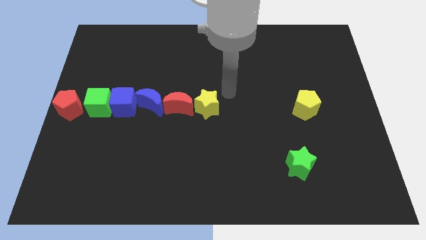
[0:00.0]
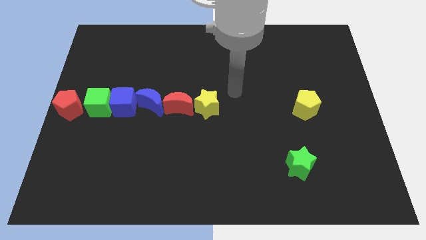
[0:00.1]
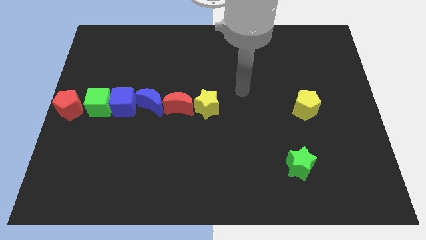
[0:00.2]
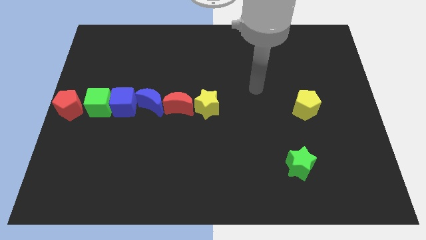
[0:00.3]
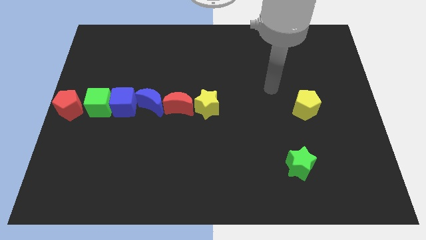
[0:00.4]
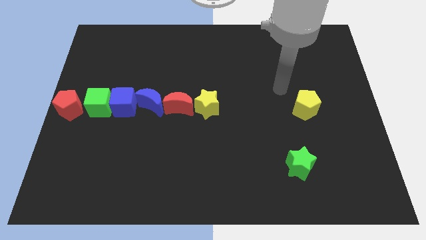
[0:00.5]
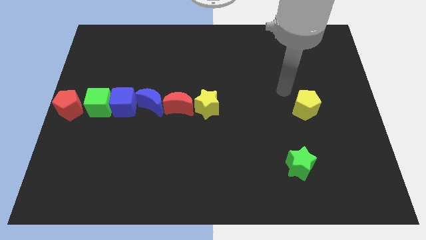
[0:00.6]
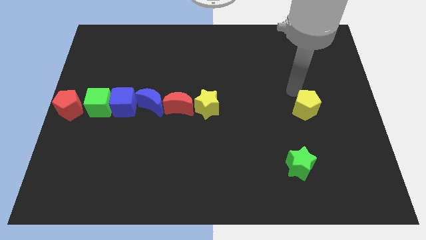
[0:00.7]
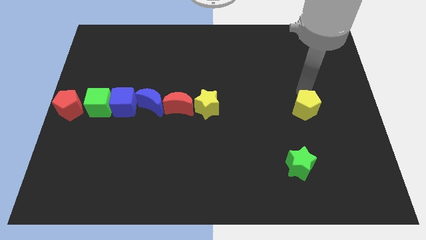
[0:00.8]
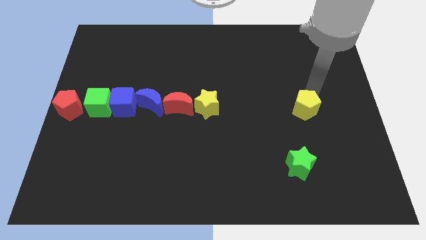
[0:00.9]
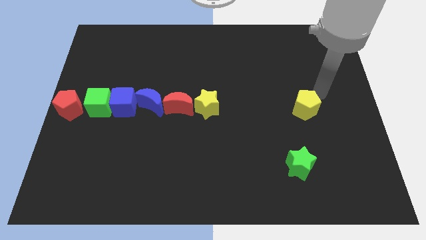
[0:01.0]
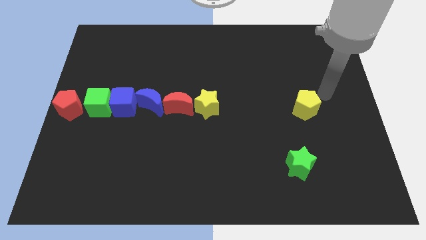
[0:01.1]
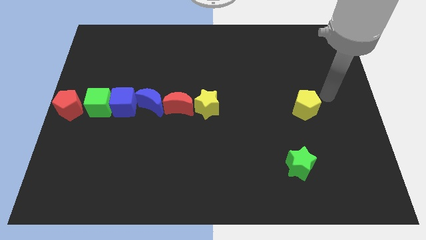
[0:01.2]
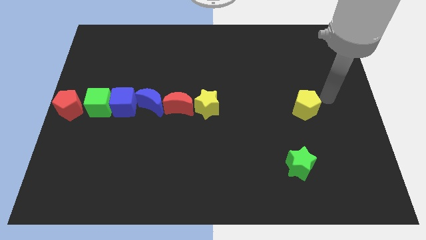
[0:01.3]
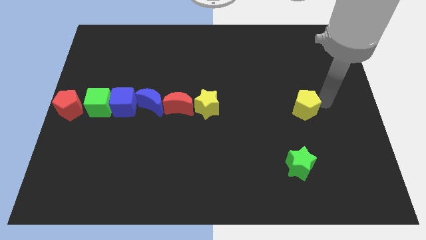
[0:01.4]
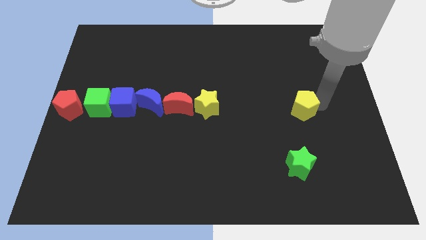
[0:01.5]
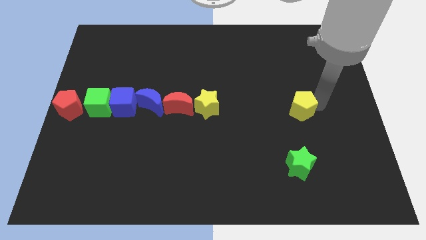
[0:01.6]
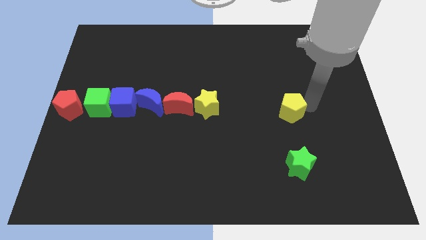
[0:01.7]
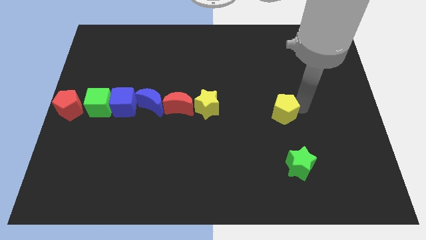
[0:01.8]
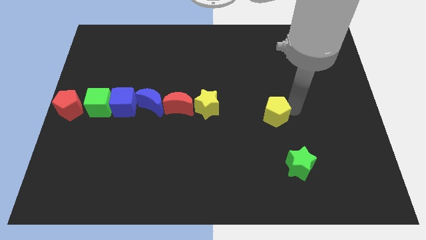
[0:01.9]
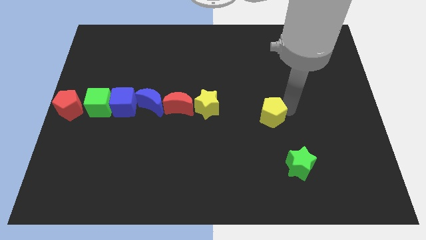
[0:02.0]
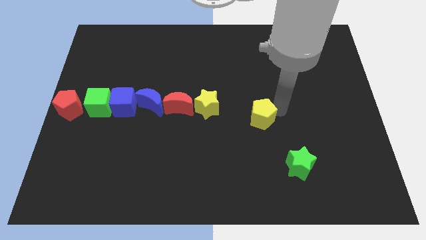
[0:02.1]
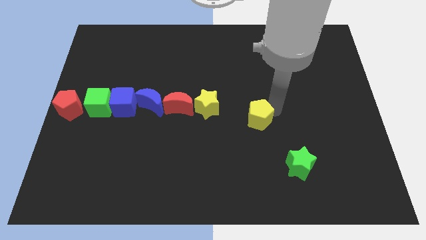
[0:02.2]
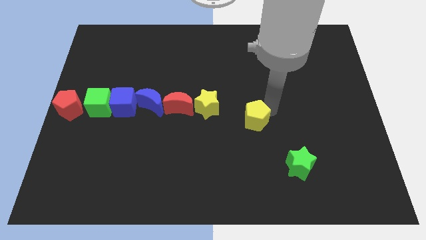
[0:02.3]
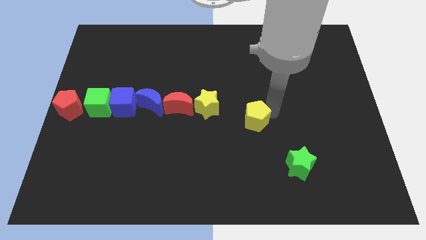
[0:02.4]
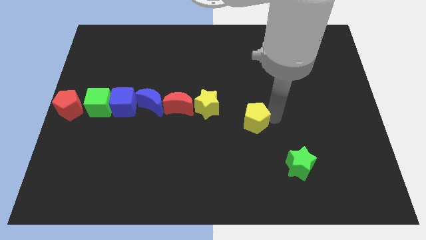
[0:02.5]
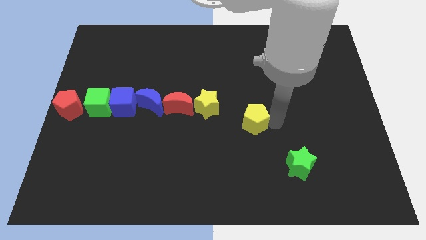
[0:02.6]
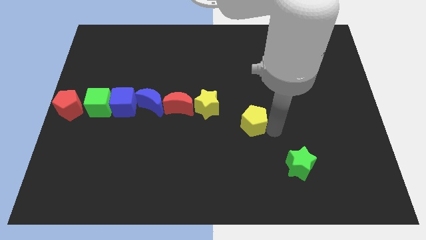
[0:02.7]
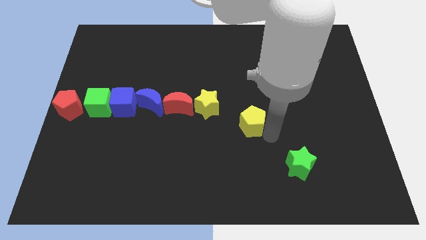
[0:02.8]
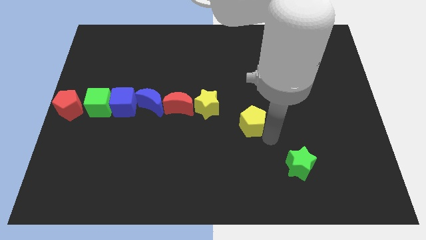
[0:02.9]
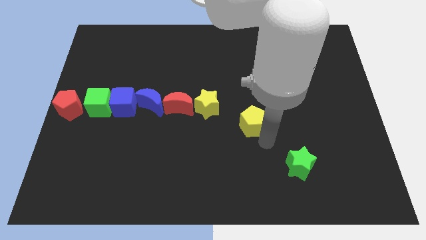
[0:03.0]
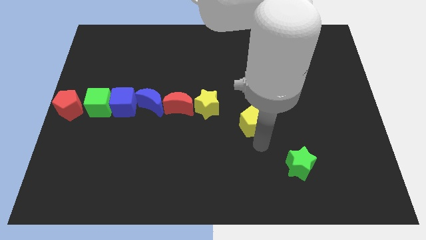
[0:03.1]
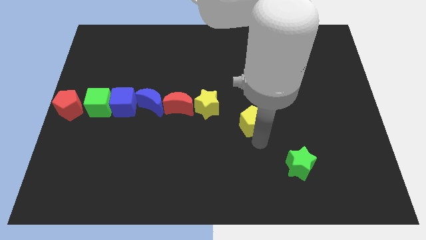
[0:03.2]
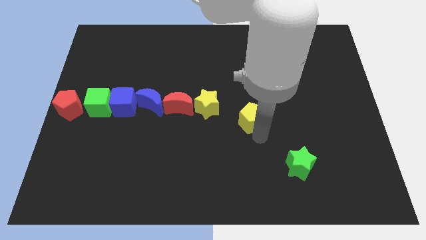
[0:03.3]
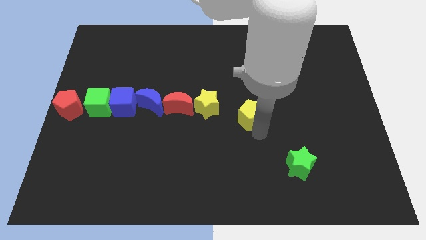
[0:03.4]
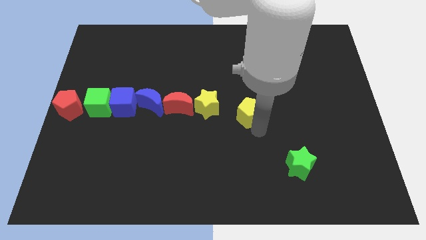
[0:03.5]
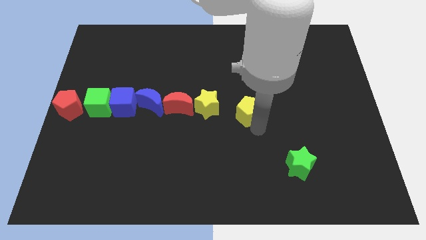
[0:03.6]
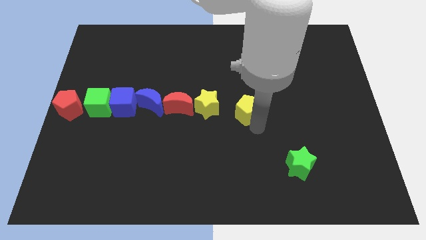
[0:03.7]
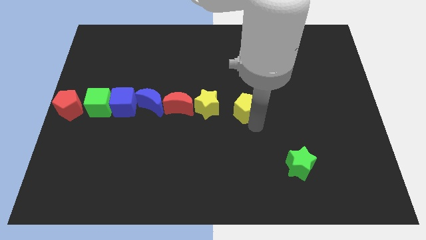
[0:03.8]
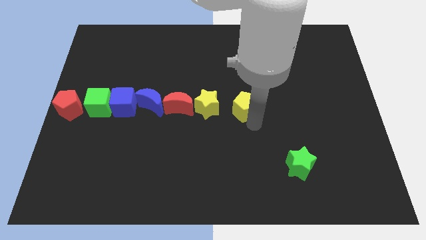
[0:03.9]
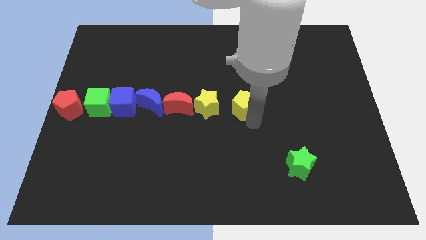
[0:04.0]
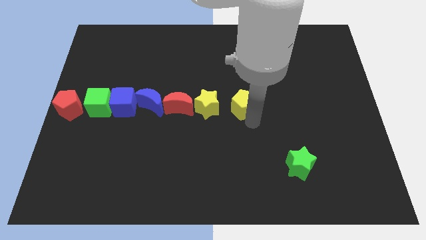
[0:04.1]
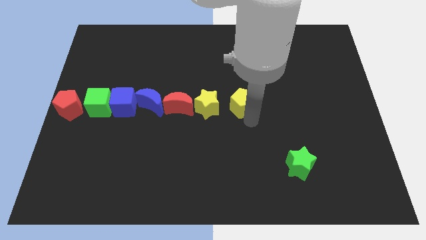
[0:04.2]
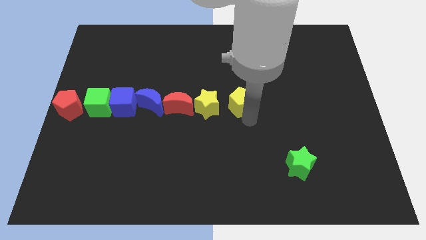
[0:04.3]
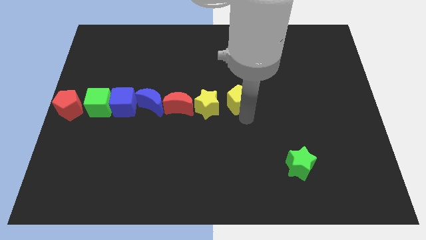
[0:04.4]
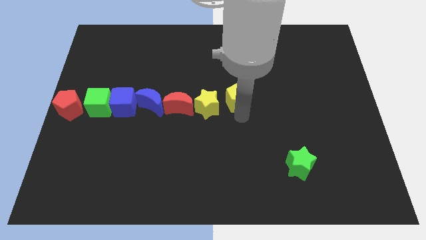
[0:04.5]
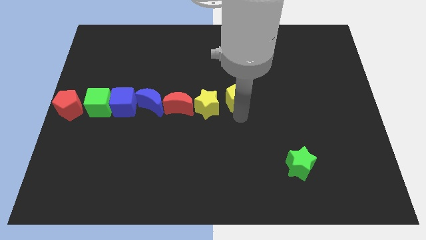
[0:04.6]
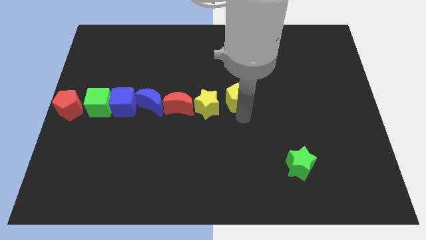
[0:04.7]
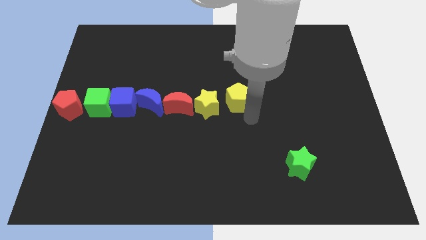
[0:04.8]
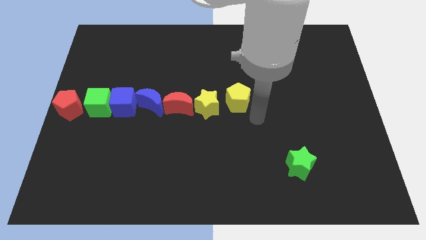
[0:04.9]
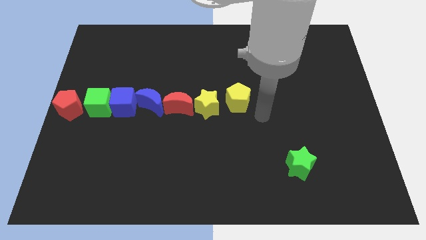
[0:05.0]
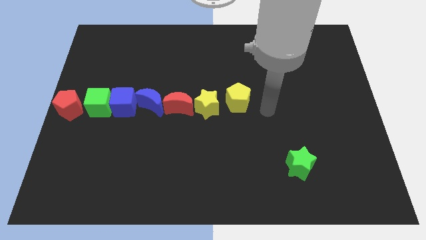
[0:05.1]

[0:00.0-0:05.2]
push the yellow pentagon to the right of the yellow star

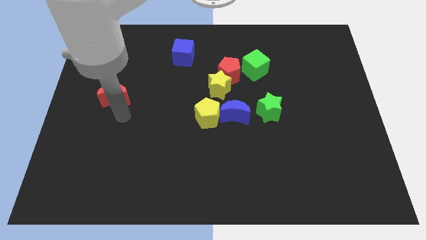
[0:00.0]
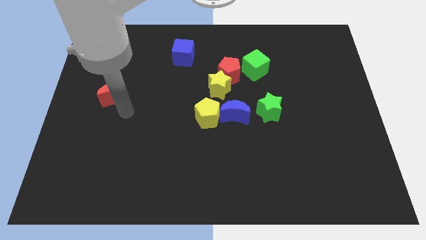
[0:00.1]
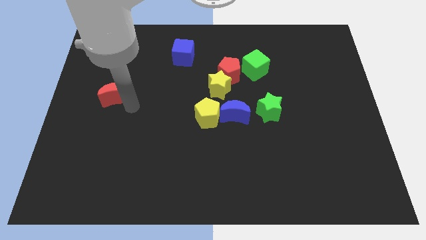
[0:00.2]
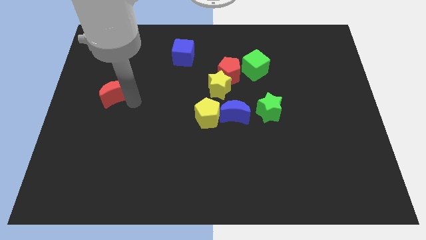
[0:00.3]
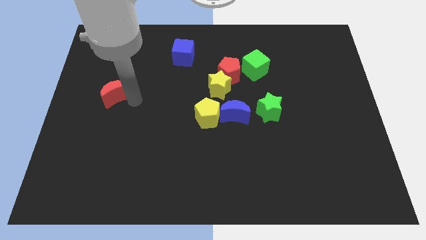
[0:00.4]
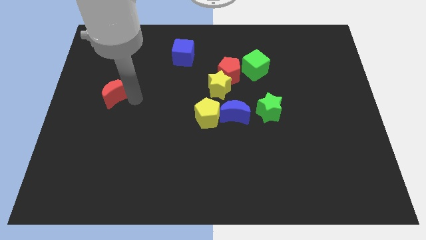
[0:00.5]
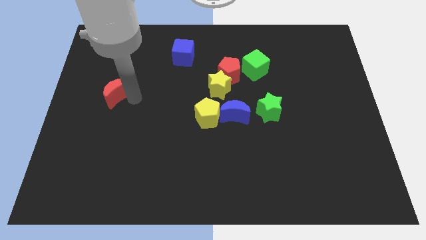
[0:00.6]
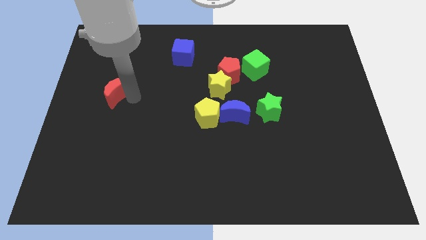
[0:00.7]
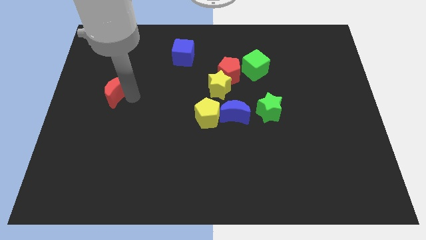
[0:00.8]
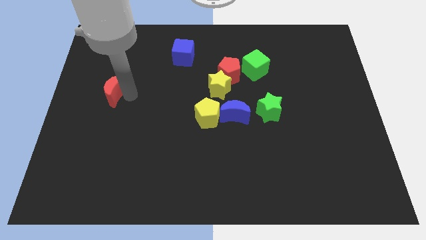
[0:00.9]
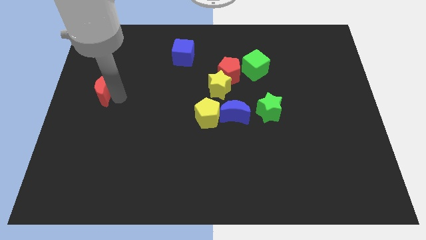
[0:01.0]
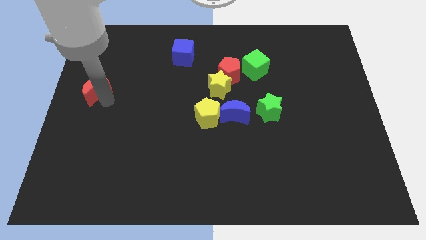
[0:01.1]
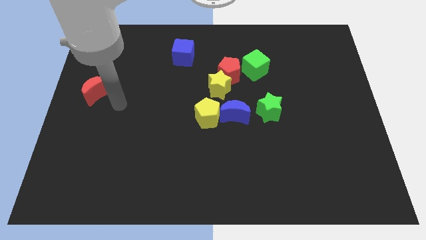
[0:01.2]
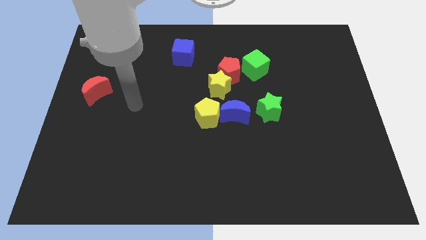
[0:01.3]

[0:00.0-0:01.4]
move the red crescent to the left center of the board

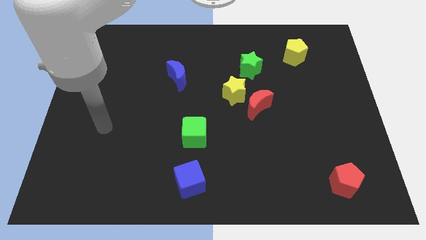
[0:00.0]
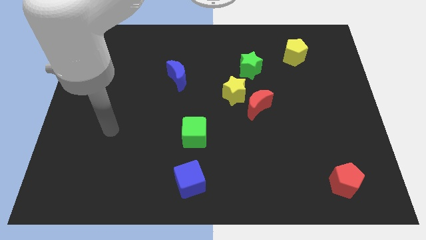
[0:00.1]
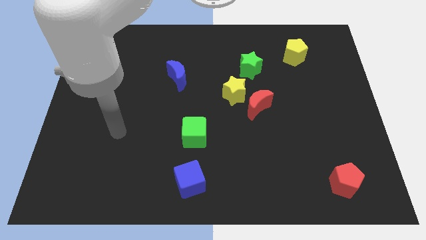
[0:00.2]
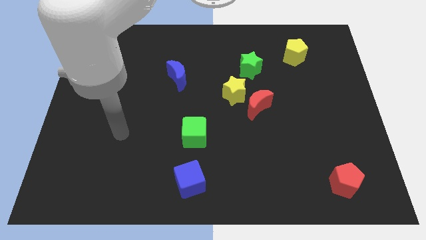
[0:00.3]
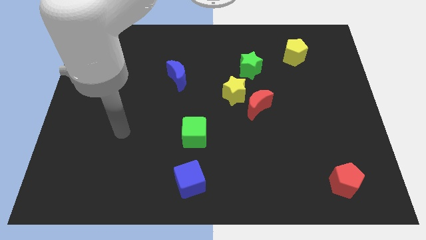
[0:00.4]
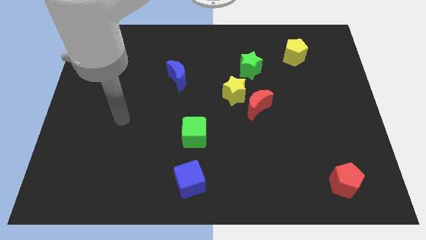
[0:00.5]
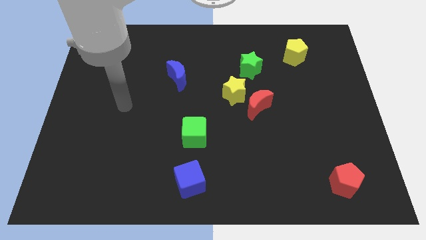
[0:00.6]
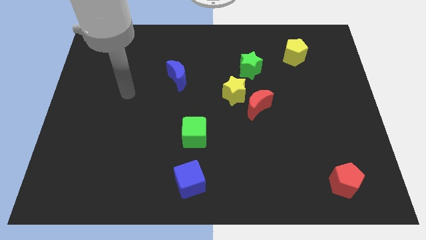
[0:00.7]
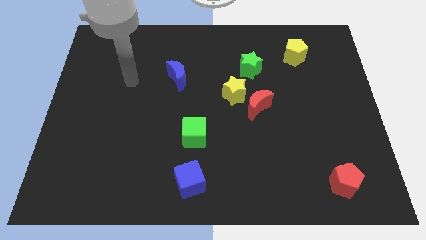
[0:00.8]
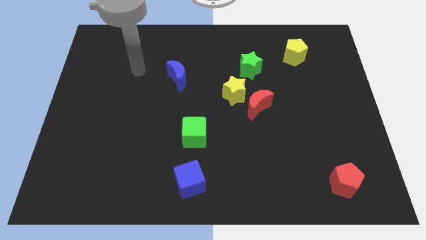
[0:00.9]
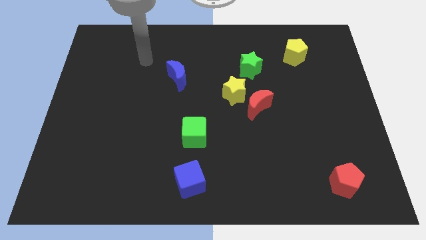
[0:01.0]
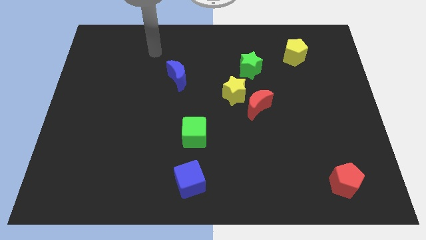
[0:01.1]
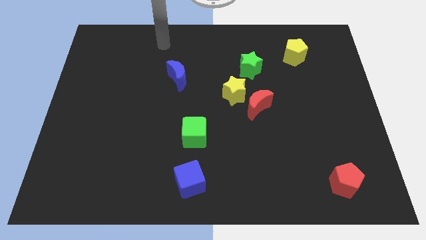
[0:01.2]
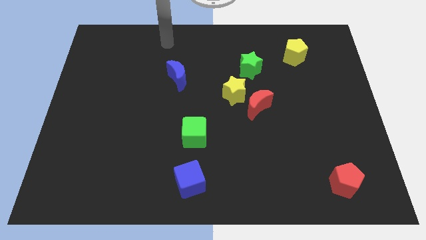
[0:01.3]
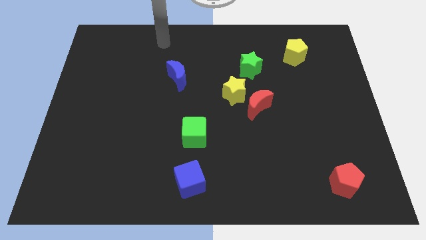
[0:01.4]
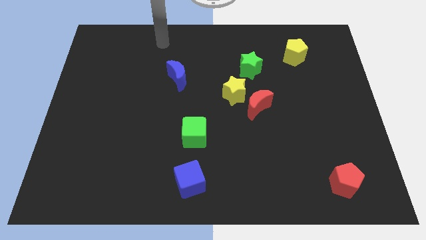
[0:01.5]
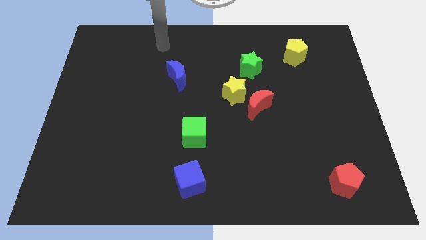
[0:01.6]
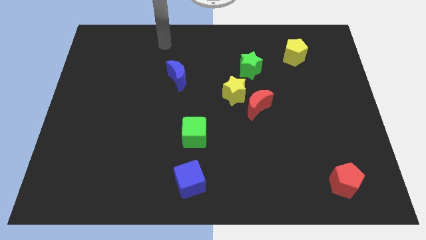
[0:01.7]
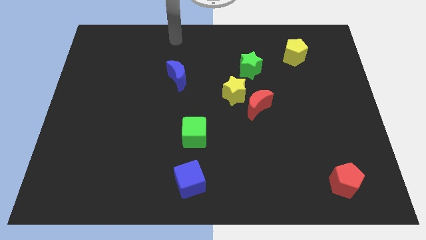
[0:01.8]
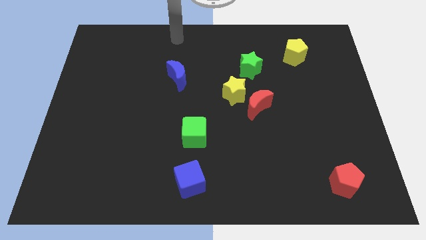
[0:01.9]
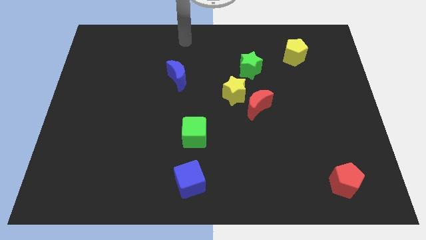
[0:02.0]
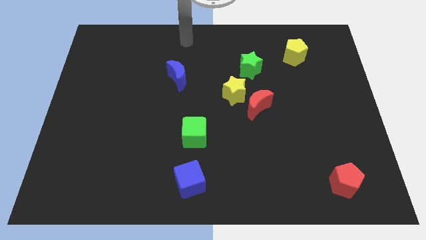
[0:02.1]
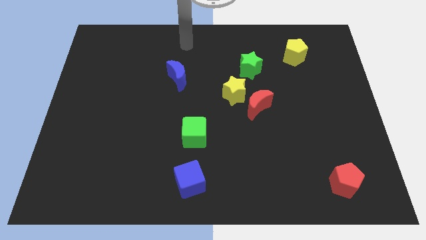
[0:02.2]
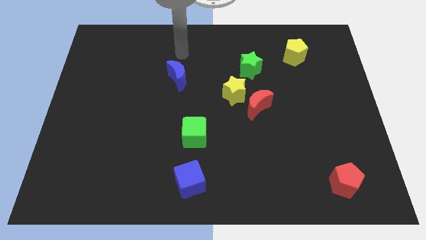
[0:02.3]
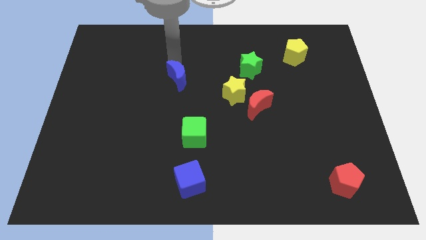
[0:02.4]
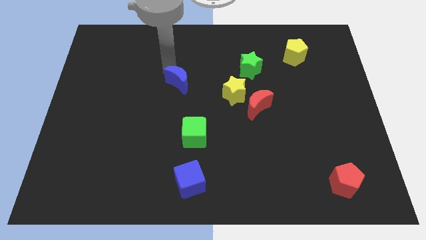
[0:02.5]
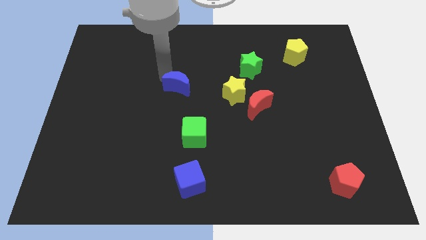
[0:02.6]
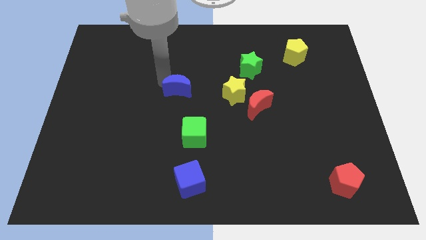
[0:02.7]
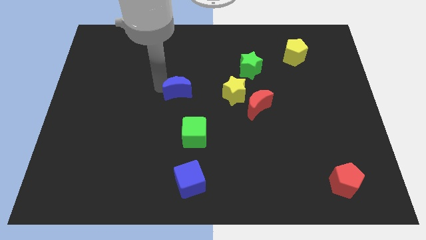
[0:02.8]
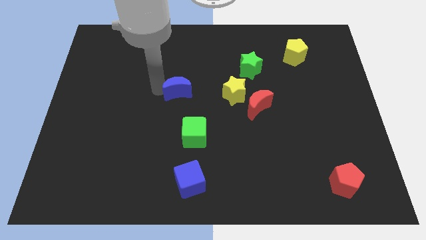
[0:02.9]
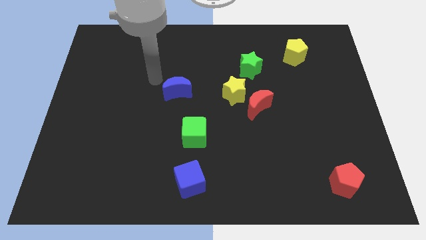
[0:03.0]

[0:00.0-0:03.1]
adjust the blue crescent to the left of the yellow star
